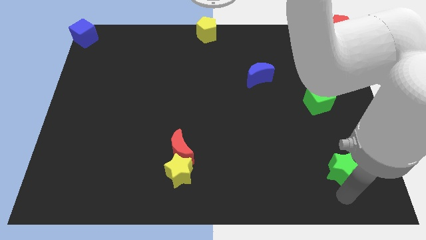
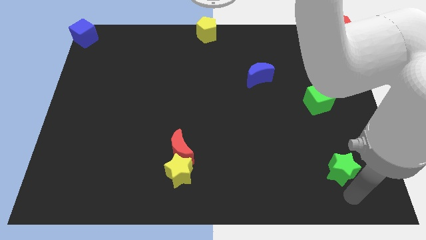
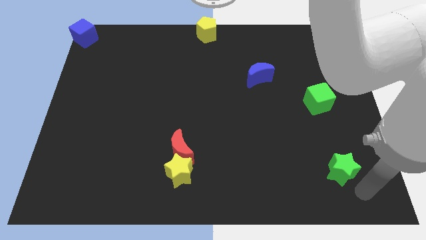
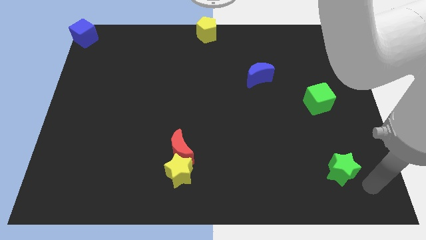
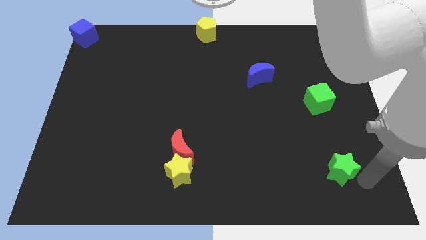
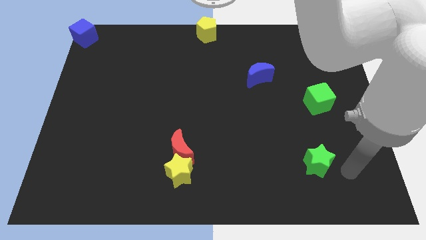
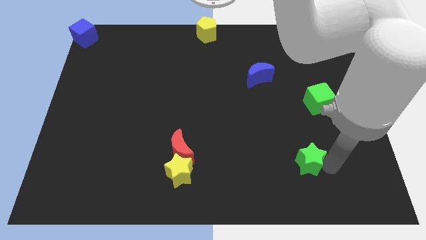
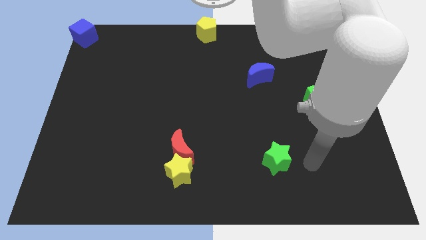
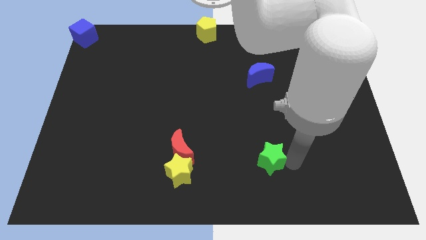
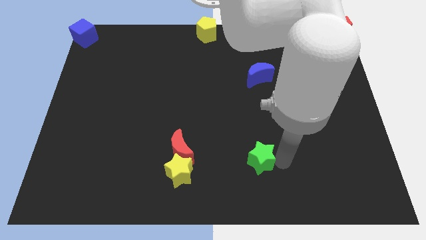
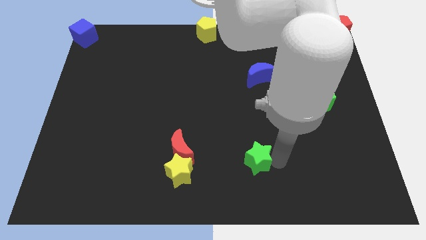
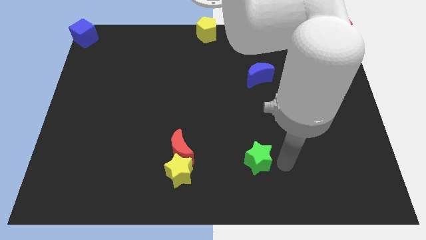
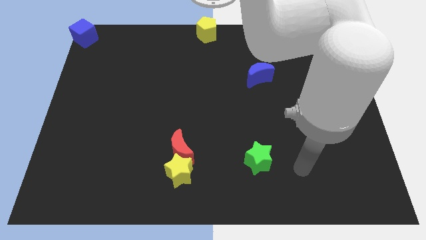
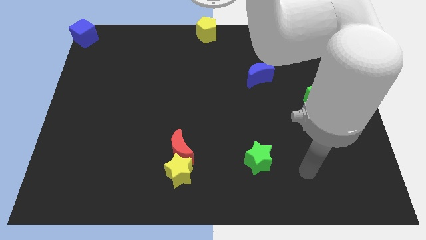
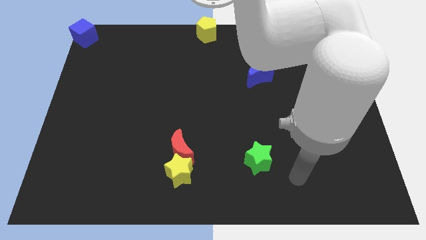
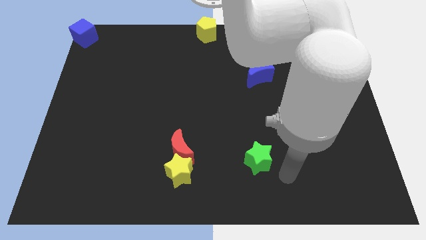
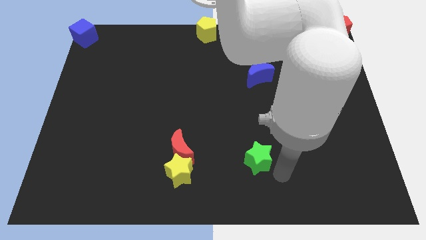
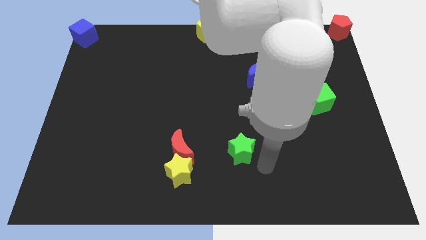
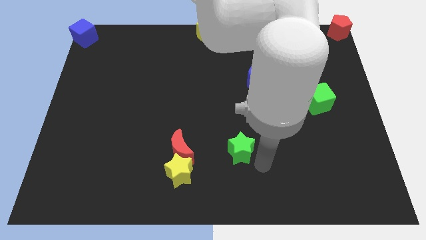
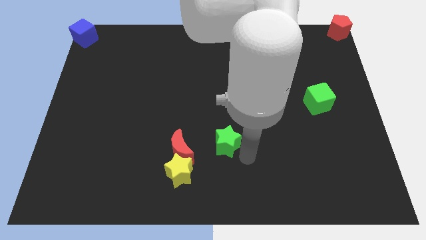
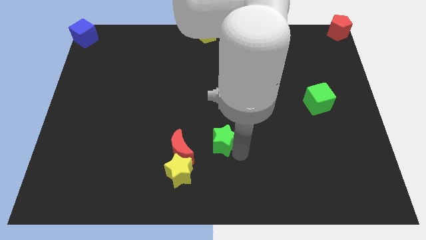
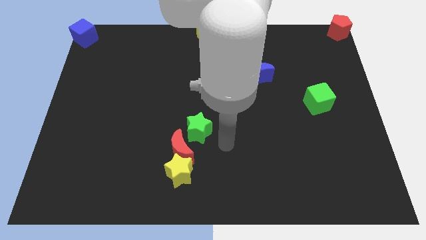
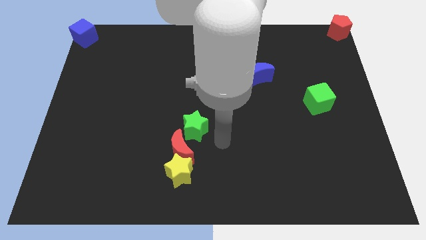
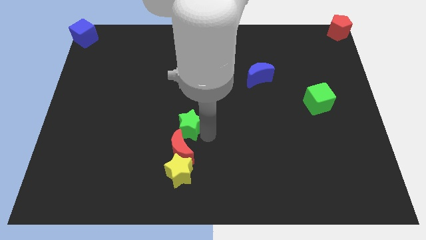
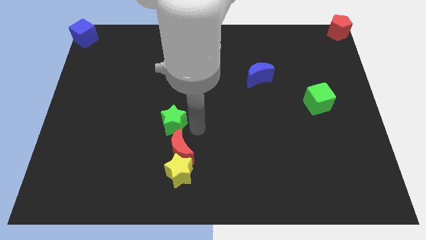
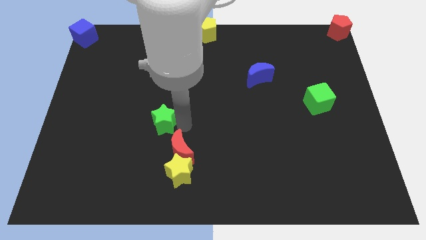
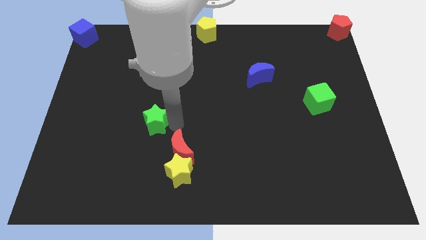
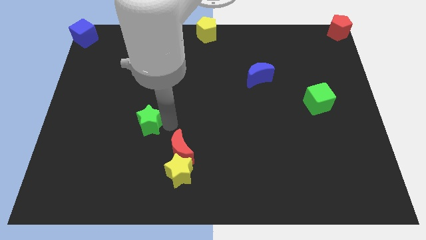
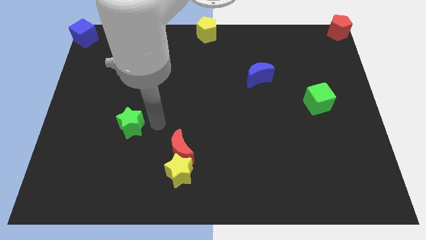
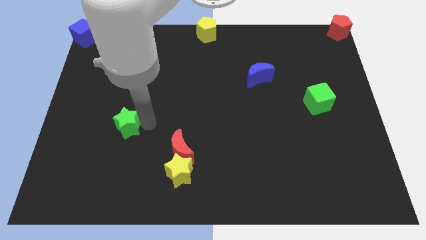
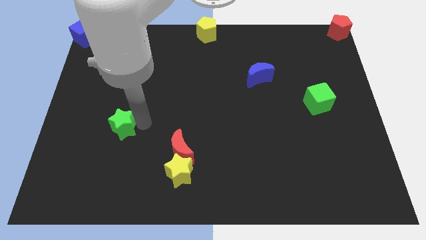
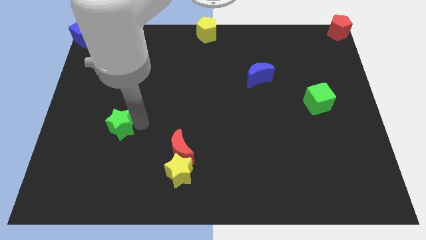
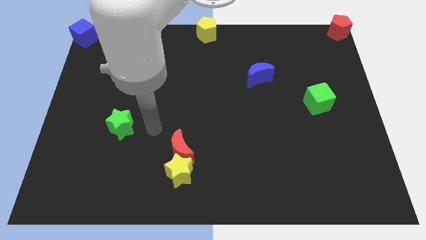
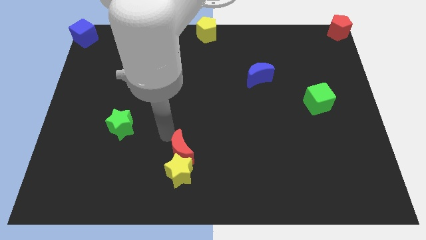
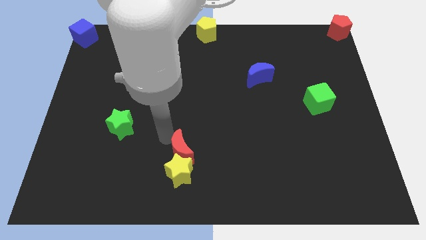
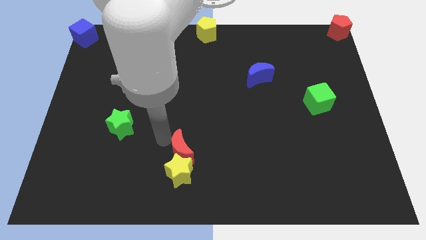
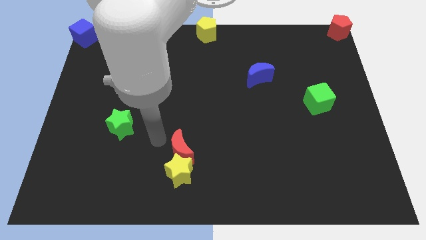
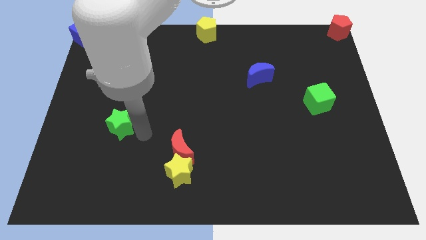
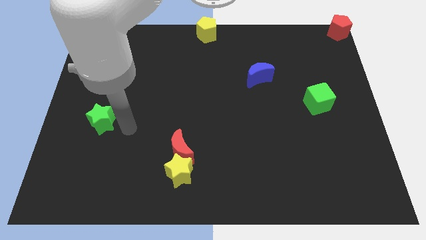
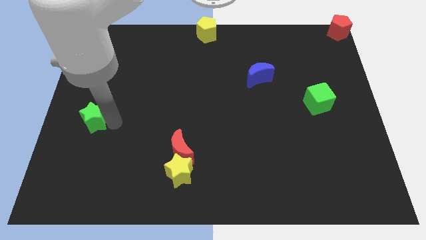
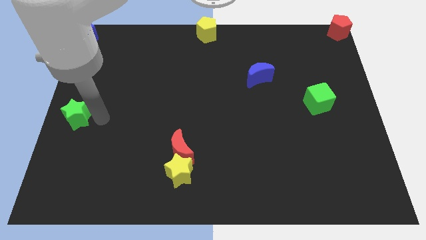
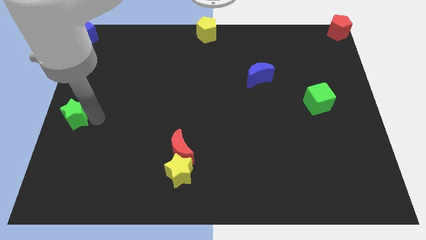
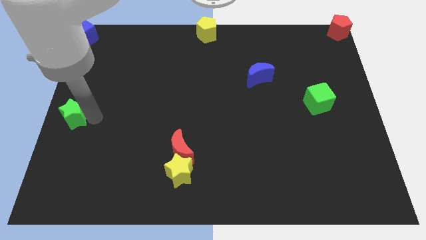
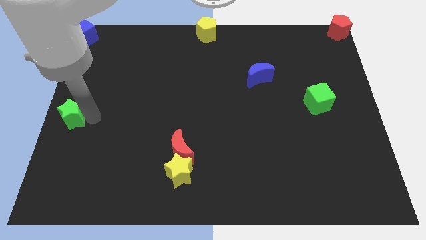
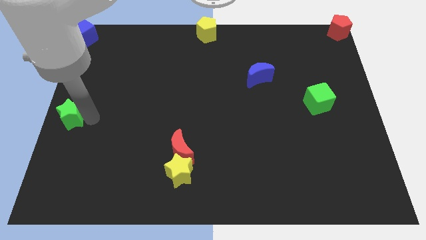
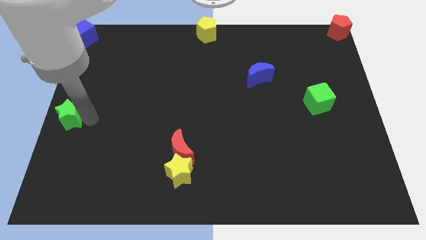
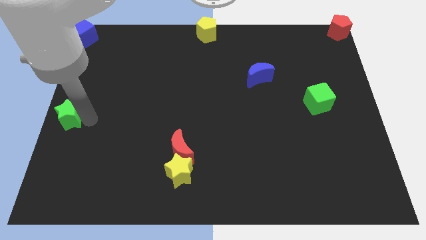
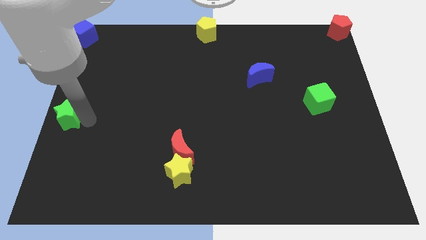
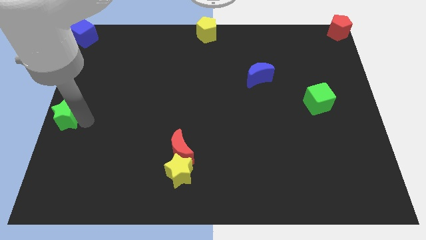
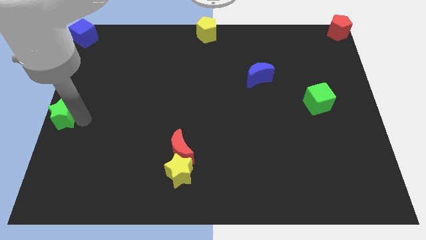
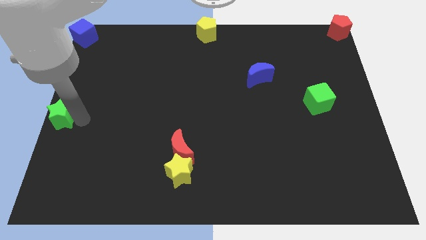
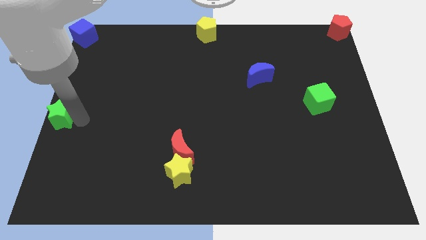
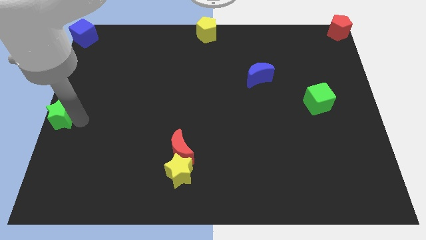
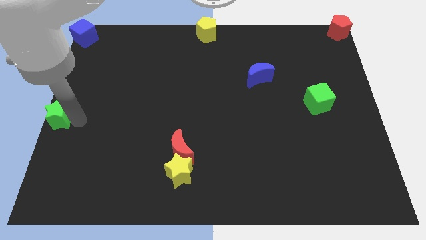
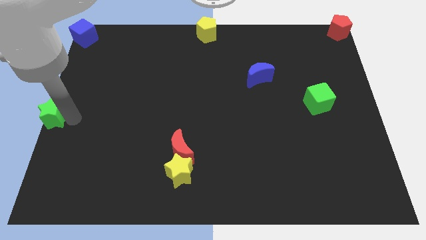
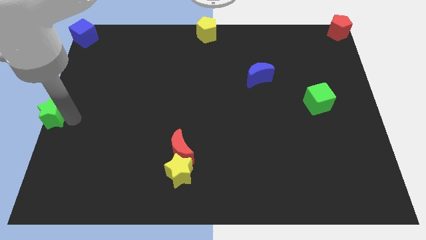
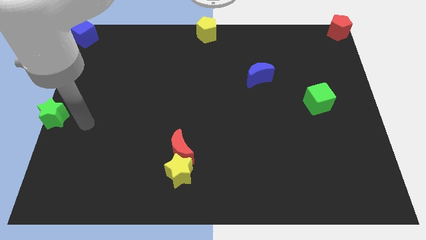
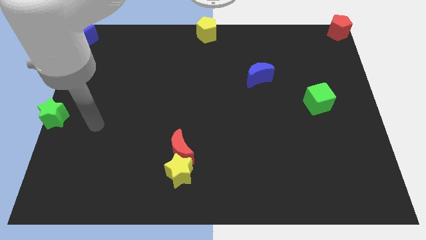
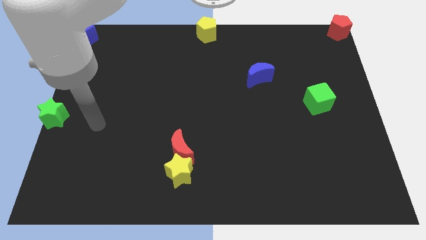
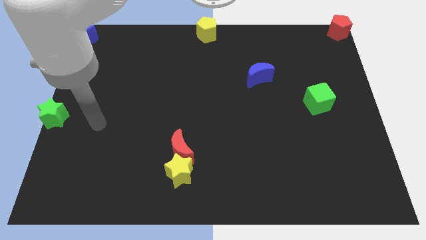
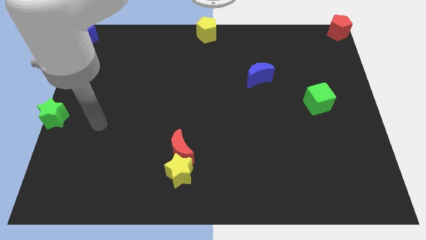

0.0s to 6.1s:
place green star vertically at the bottom side of the blue cube

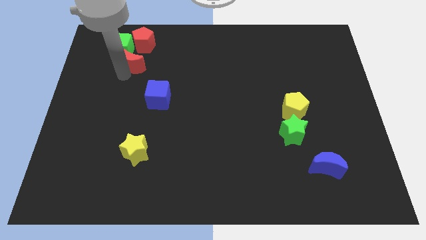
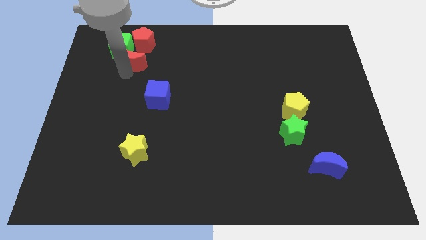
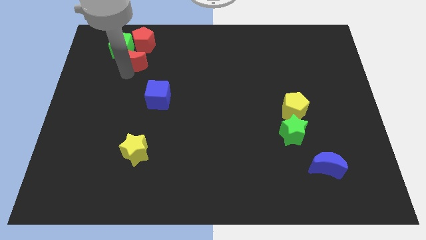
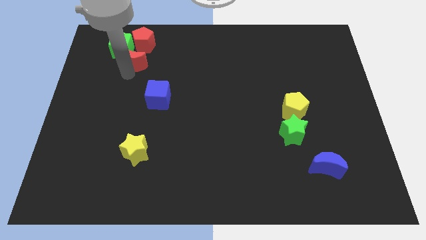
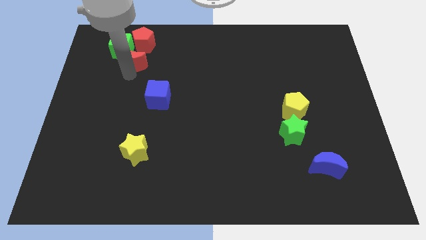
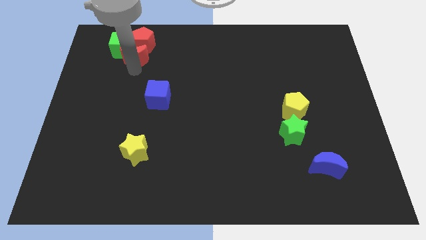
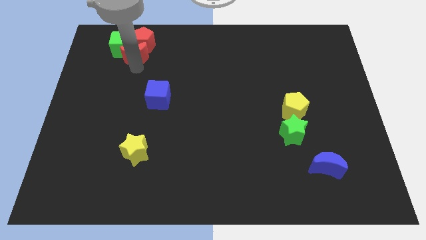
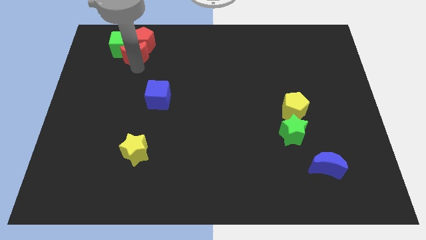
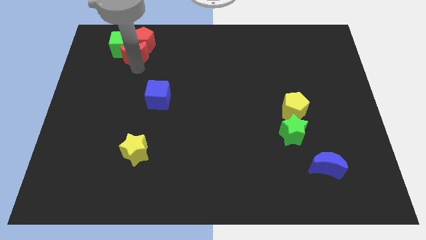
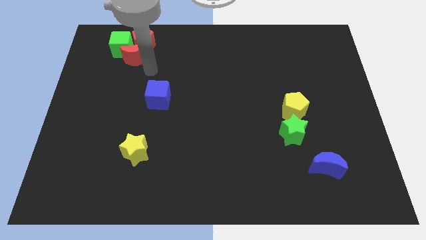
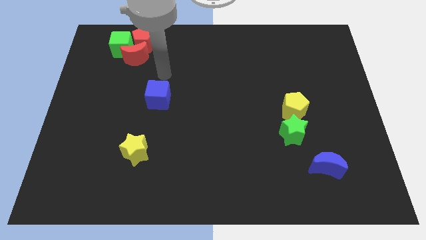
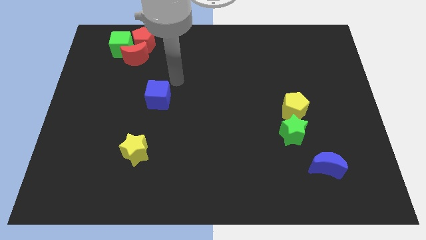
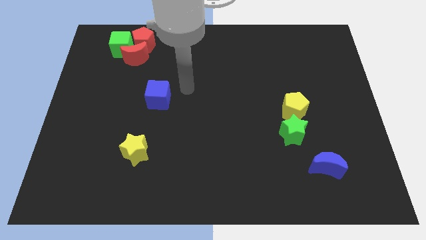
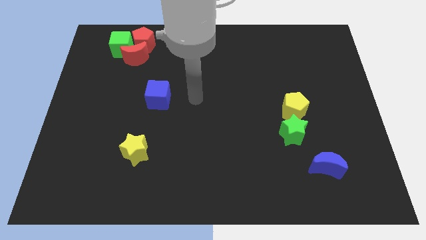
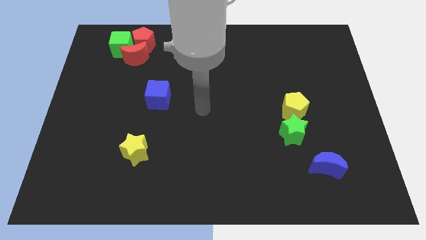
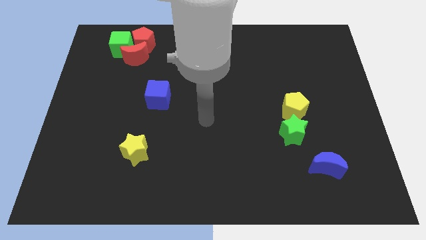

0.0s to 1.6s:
move the red crescent into the green cube and red pentagon

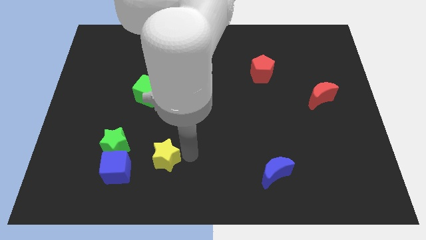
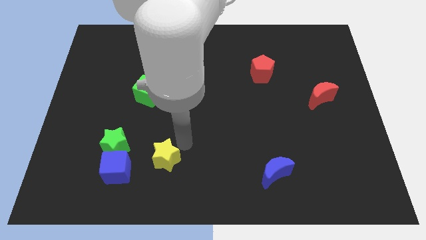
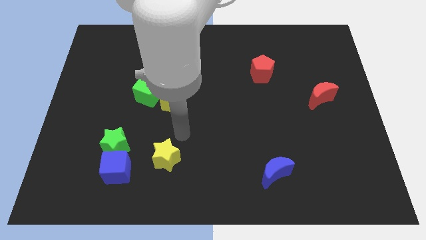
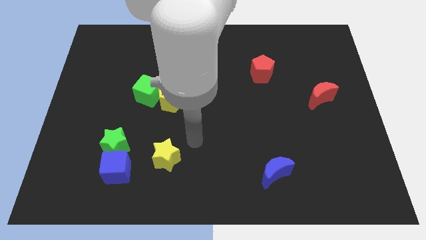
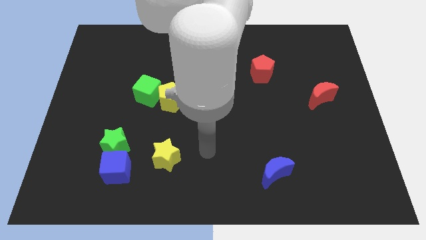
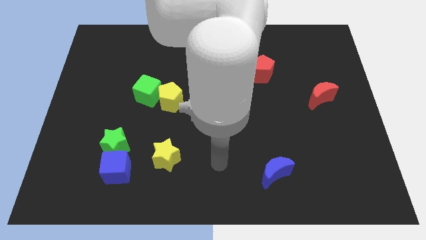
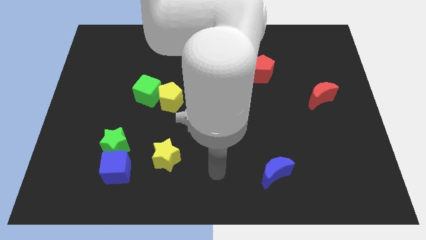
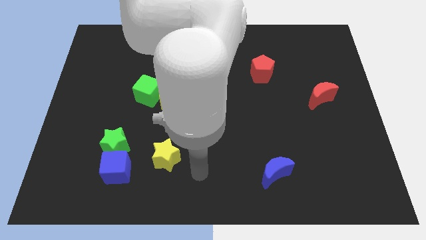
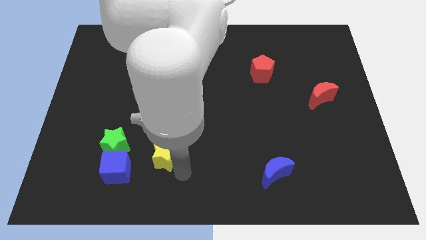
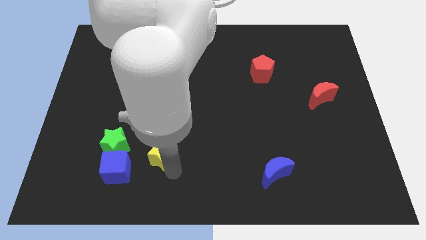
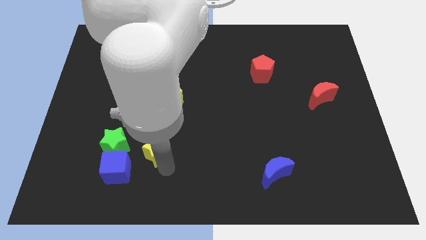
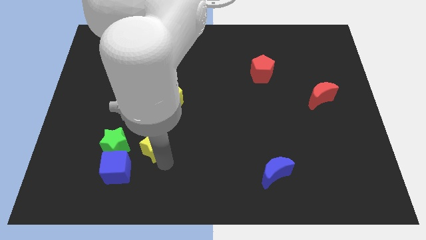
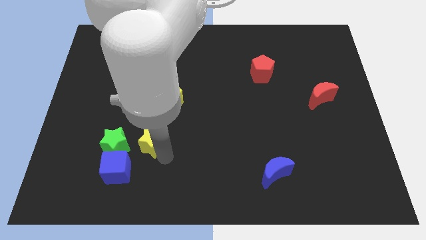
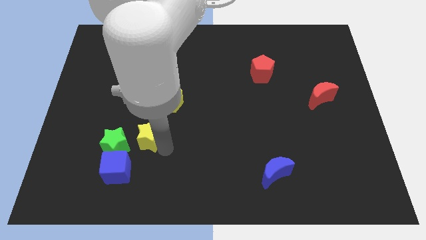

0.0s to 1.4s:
place yellow star to the right of green star
